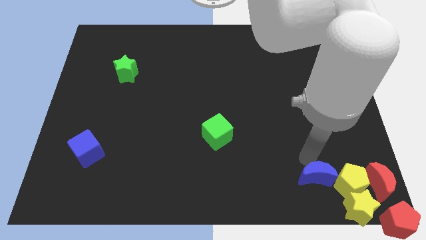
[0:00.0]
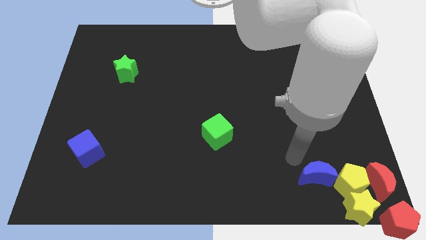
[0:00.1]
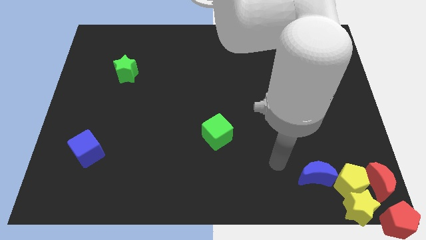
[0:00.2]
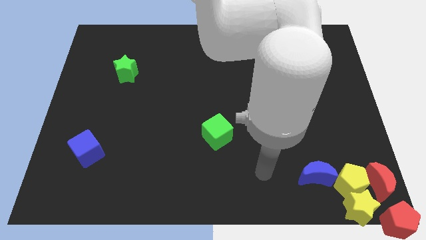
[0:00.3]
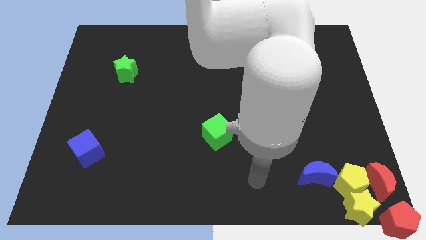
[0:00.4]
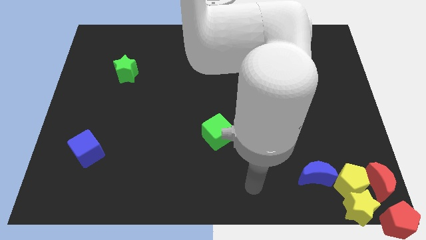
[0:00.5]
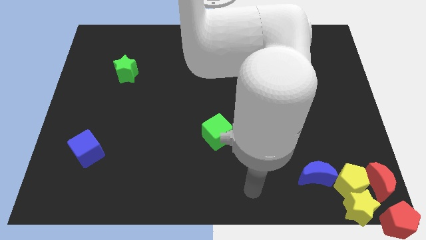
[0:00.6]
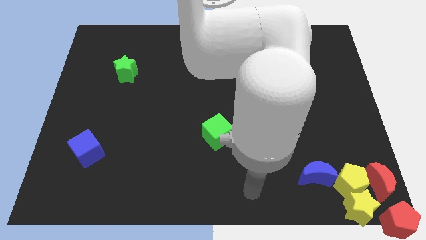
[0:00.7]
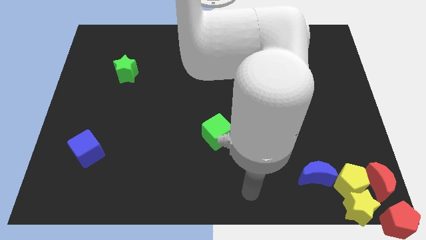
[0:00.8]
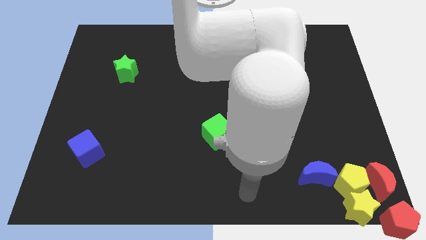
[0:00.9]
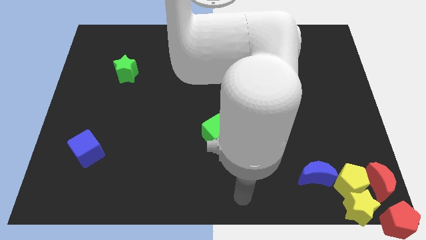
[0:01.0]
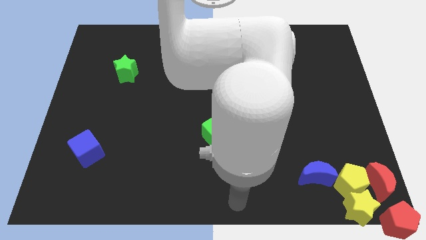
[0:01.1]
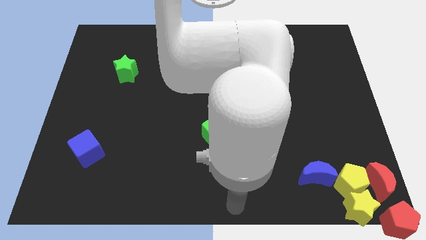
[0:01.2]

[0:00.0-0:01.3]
place your arm at the bottom center of the board

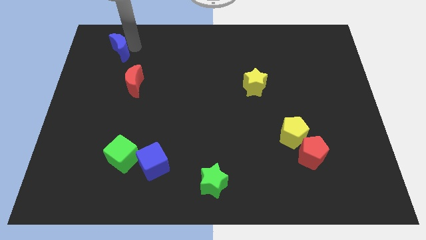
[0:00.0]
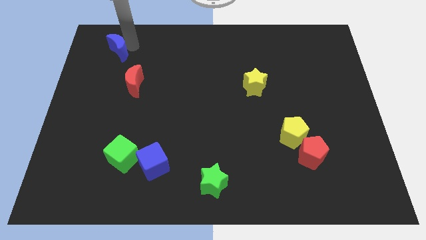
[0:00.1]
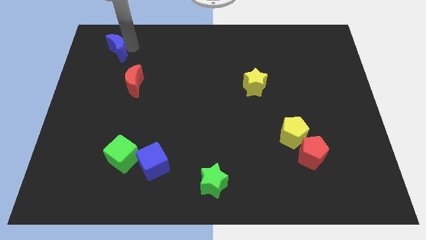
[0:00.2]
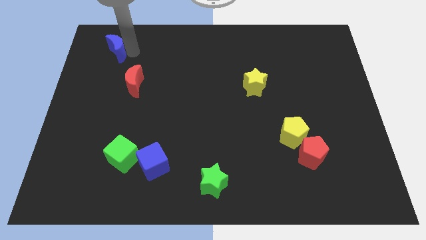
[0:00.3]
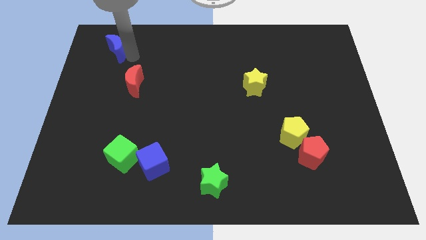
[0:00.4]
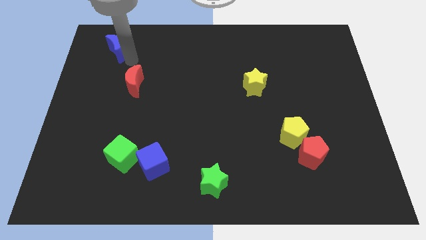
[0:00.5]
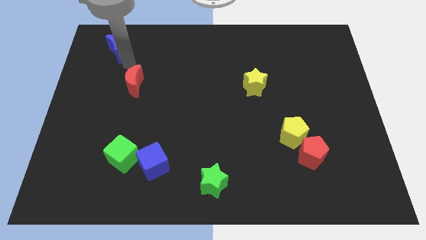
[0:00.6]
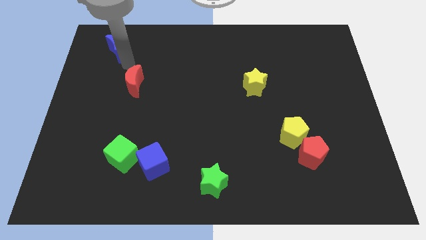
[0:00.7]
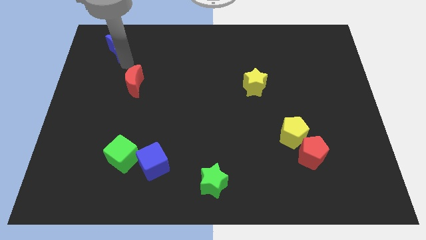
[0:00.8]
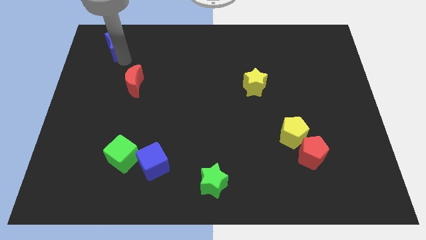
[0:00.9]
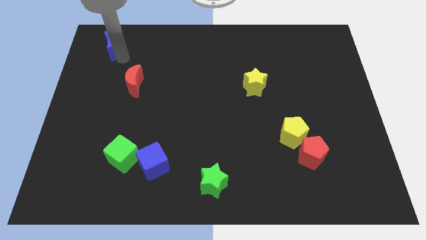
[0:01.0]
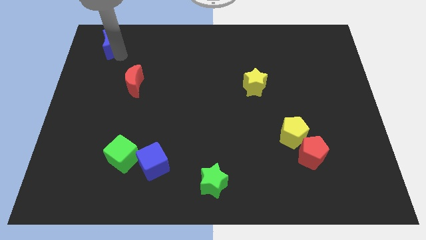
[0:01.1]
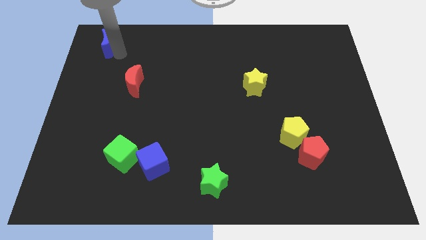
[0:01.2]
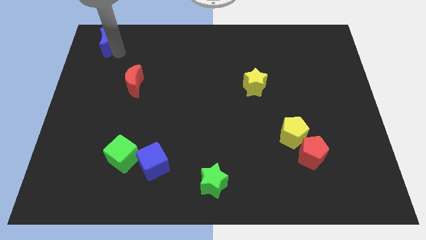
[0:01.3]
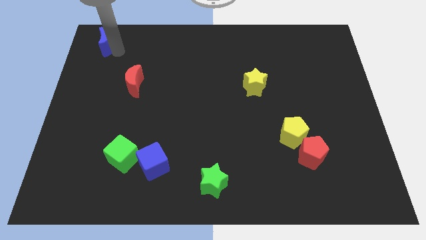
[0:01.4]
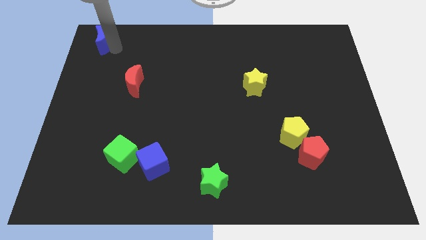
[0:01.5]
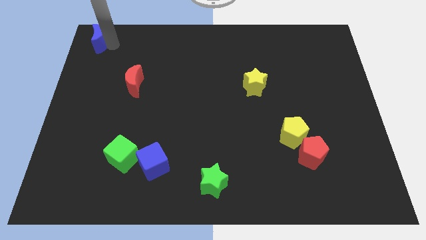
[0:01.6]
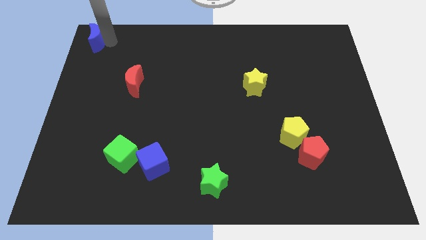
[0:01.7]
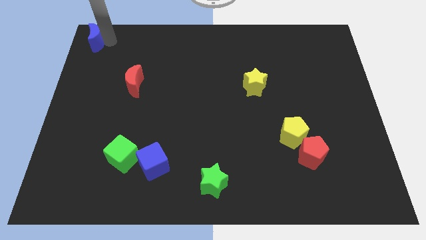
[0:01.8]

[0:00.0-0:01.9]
push the blue crescent vertically above the bottom left corner

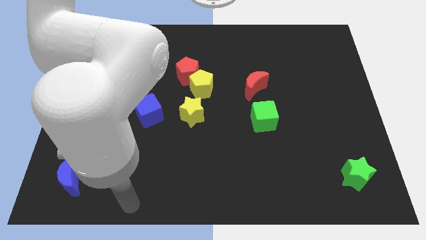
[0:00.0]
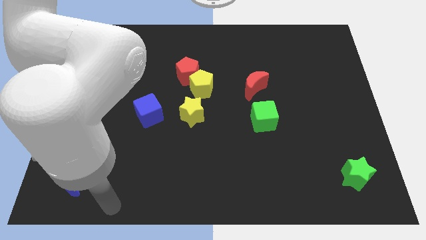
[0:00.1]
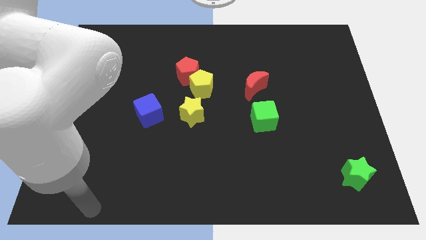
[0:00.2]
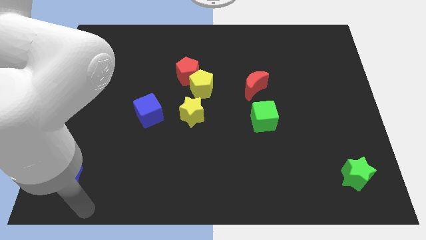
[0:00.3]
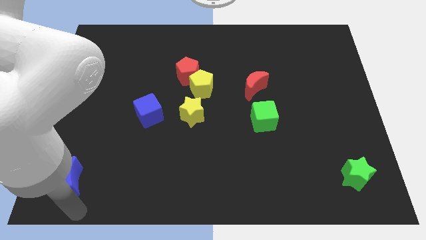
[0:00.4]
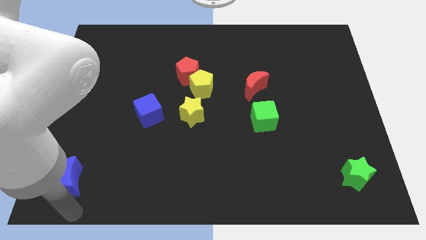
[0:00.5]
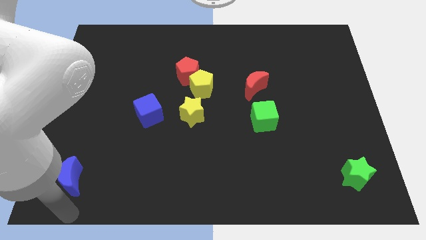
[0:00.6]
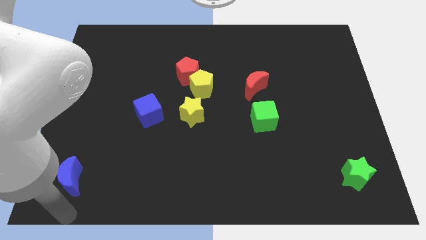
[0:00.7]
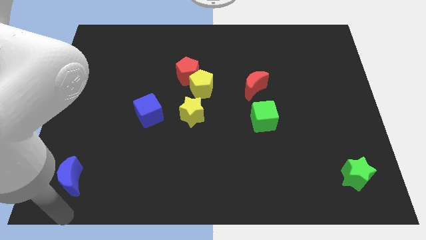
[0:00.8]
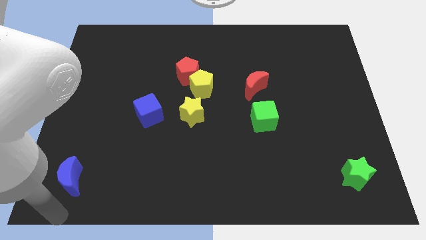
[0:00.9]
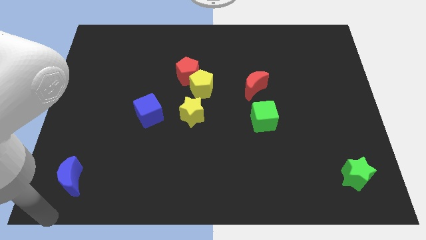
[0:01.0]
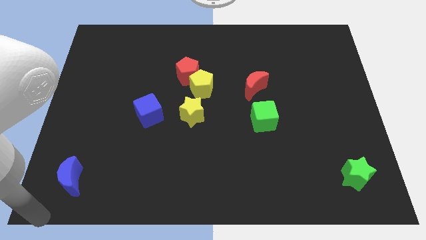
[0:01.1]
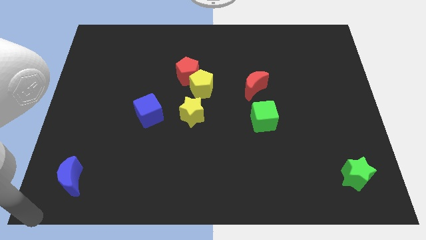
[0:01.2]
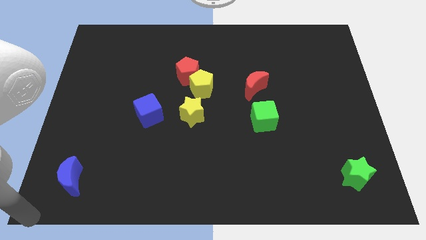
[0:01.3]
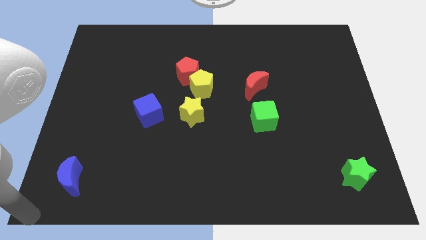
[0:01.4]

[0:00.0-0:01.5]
place your arm to the bottom left corner of the board

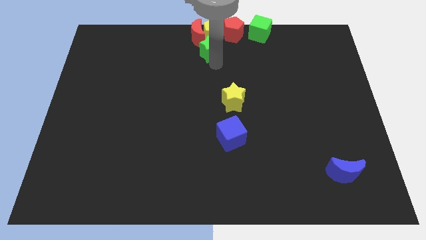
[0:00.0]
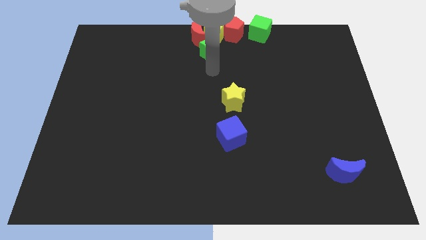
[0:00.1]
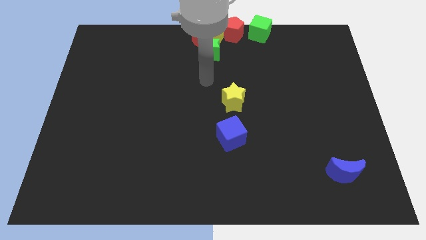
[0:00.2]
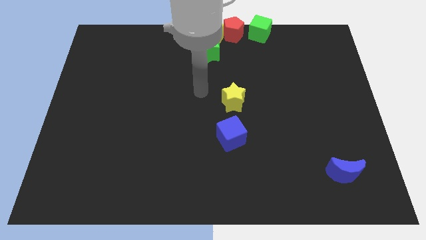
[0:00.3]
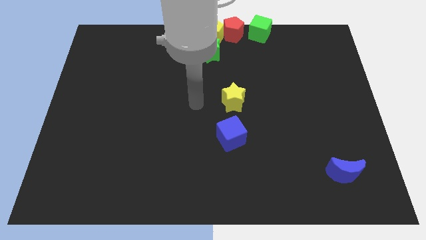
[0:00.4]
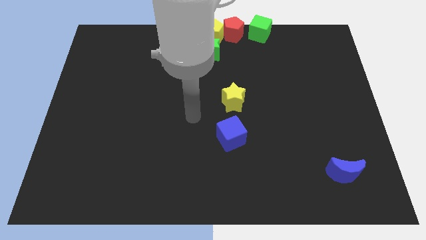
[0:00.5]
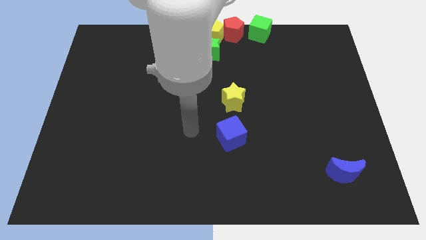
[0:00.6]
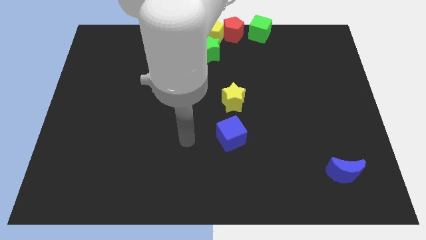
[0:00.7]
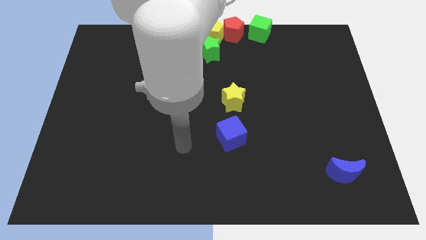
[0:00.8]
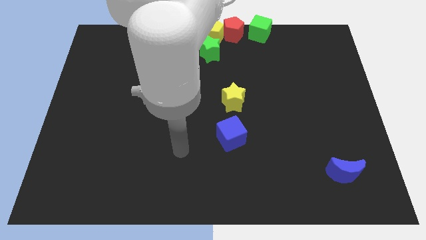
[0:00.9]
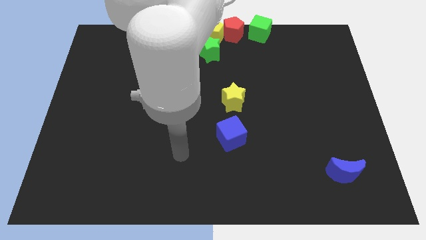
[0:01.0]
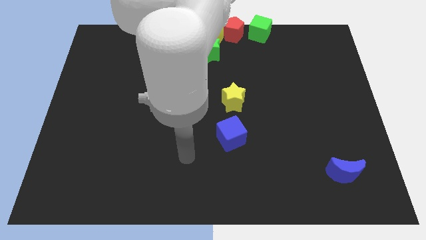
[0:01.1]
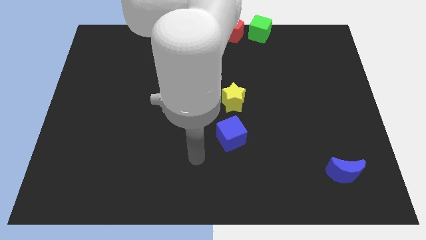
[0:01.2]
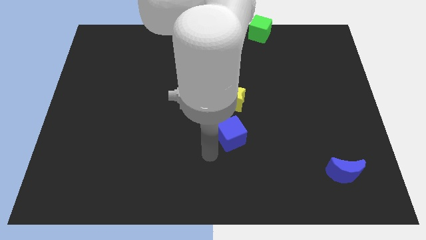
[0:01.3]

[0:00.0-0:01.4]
point your arm at the bottom left side of the blue cube

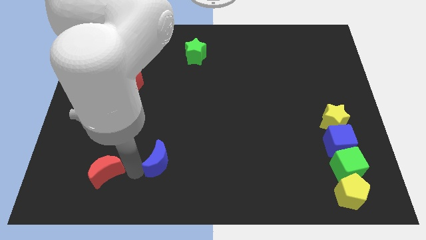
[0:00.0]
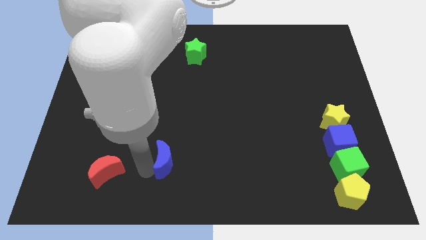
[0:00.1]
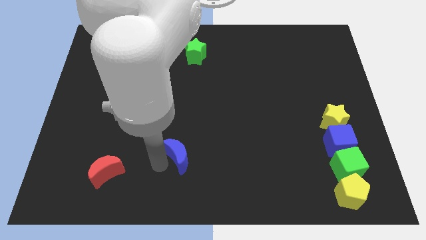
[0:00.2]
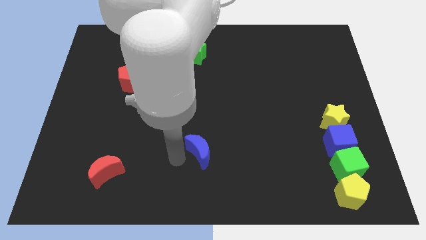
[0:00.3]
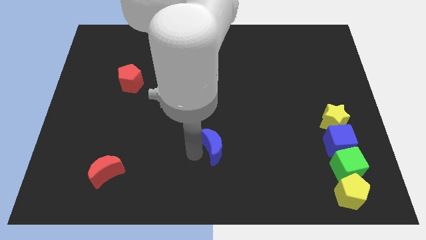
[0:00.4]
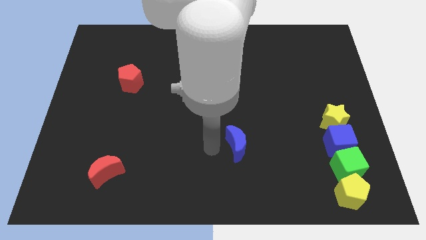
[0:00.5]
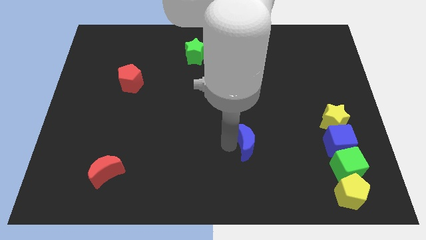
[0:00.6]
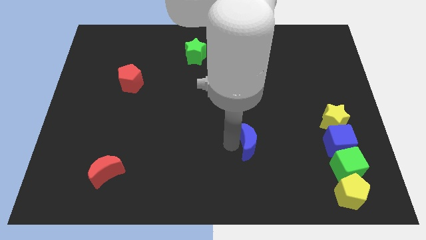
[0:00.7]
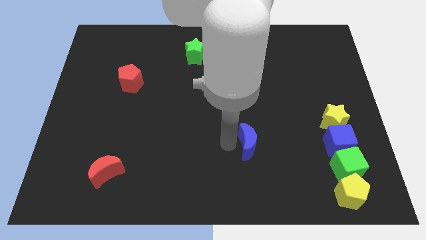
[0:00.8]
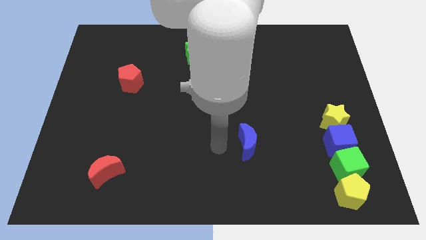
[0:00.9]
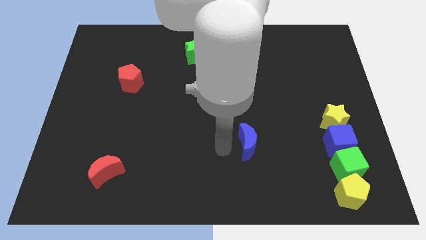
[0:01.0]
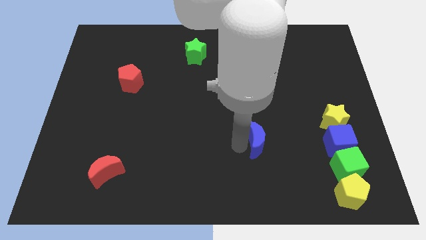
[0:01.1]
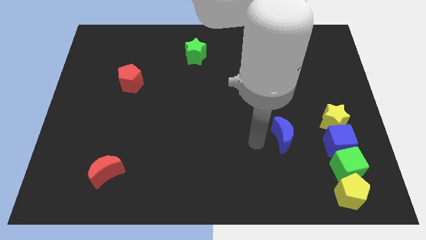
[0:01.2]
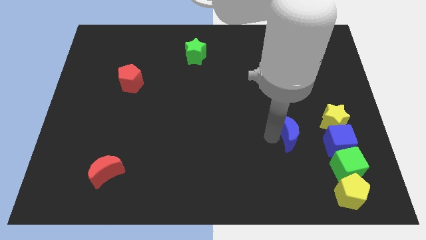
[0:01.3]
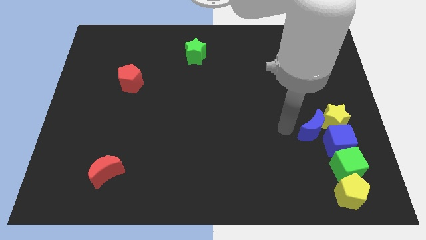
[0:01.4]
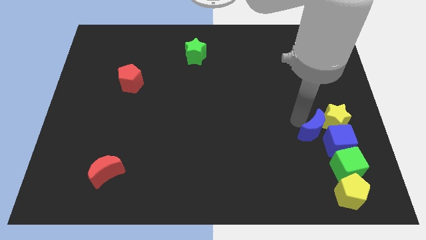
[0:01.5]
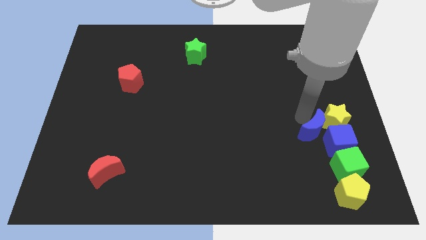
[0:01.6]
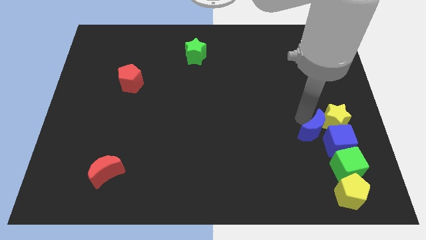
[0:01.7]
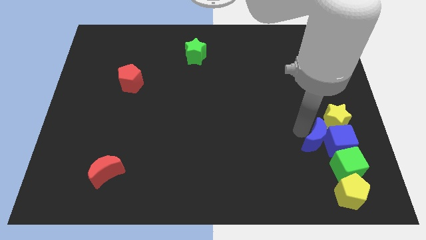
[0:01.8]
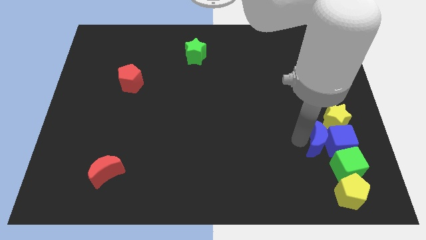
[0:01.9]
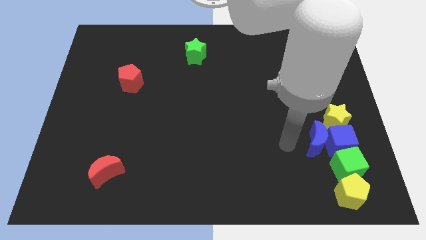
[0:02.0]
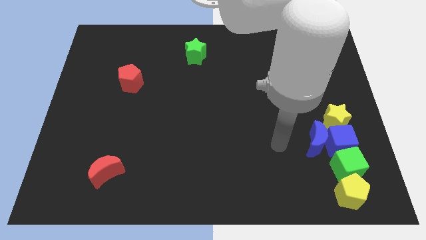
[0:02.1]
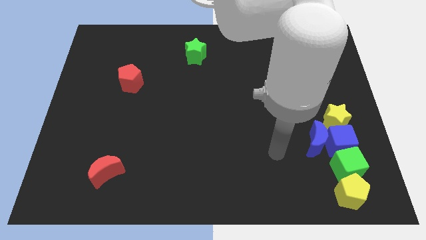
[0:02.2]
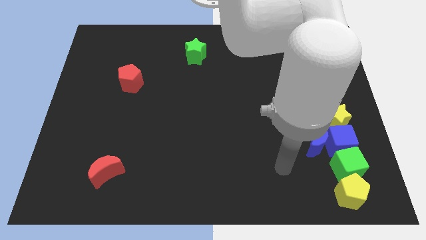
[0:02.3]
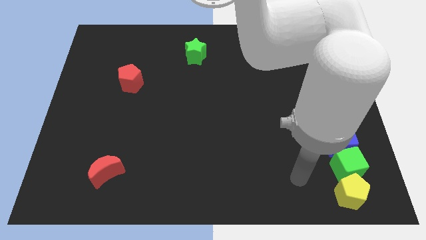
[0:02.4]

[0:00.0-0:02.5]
place the blue moon to the left side of blue cube
